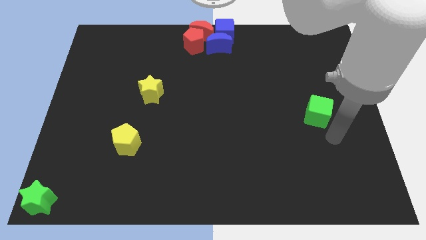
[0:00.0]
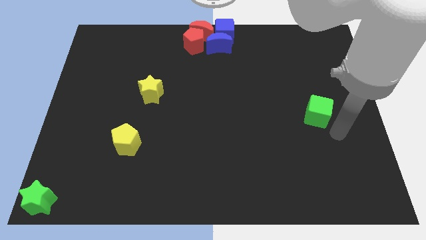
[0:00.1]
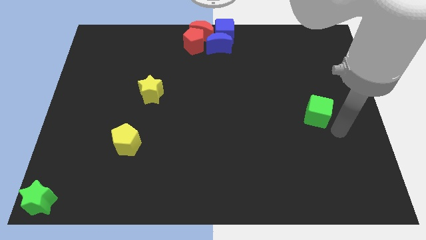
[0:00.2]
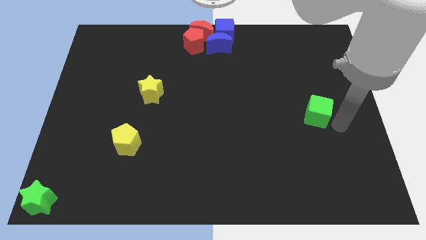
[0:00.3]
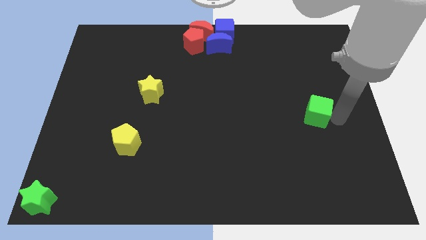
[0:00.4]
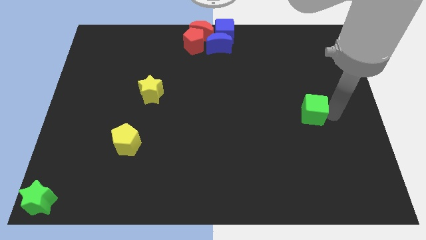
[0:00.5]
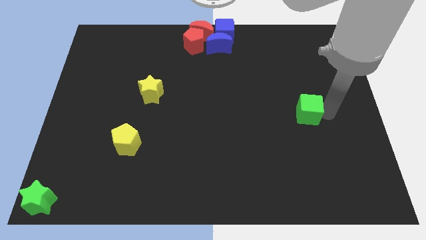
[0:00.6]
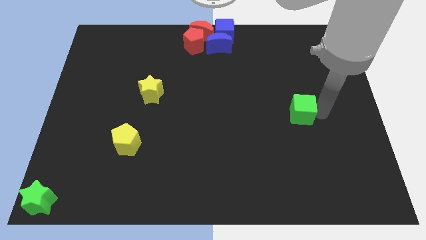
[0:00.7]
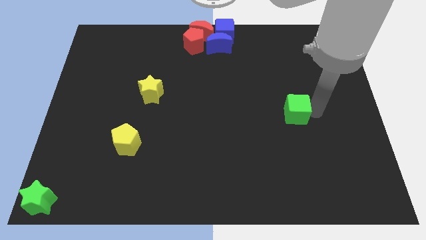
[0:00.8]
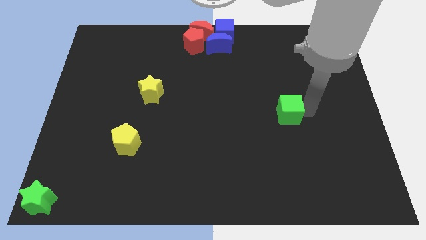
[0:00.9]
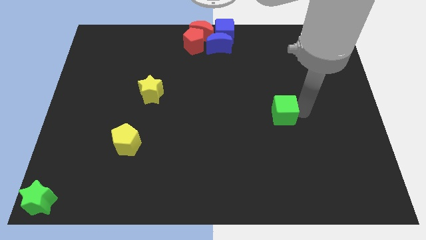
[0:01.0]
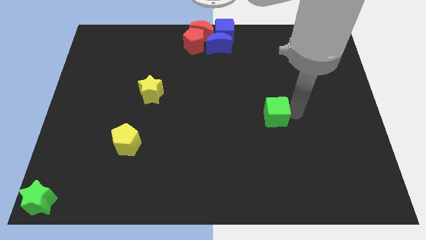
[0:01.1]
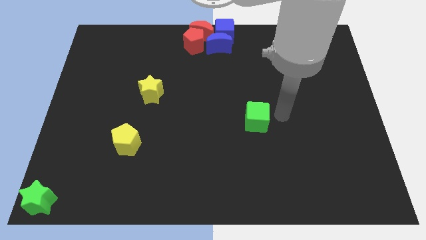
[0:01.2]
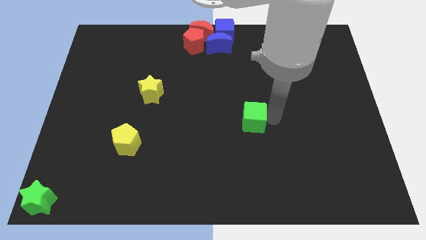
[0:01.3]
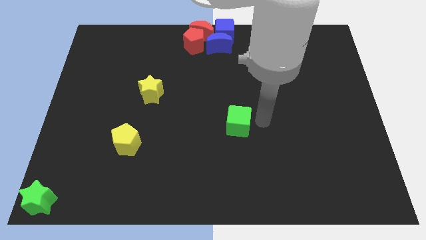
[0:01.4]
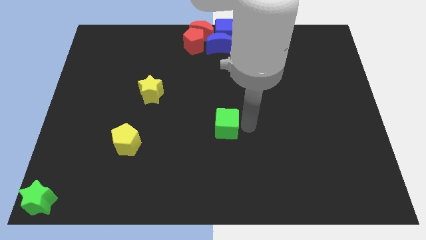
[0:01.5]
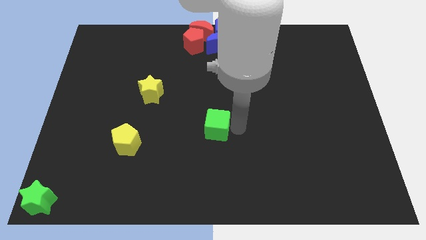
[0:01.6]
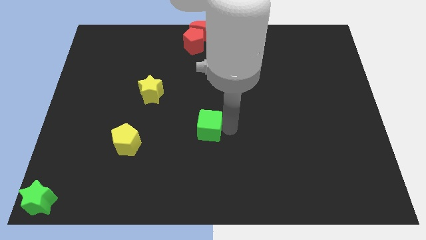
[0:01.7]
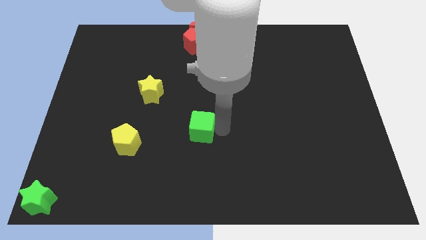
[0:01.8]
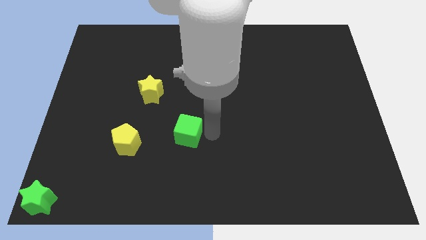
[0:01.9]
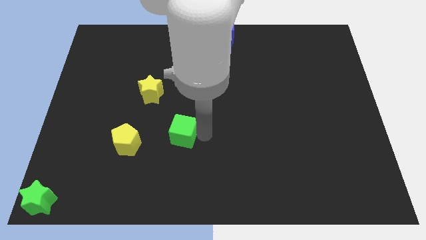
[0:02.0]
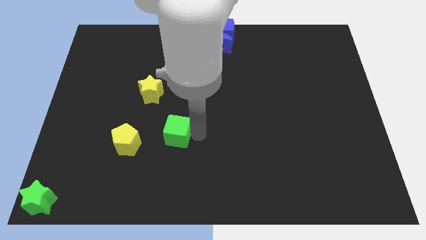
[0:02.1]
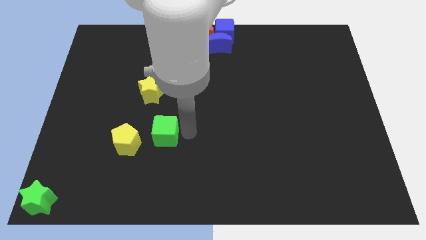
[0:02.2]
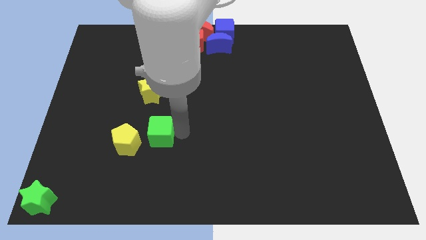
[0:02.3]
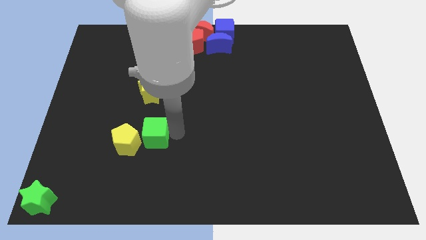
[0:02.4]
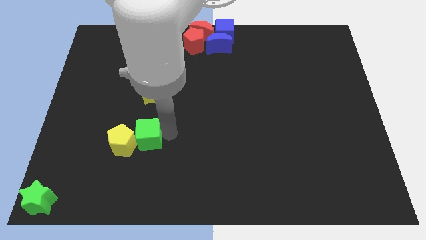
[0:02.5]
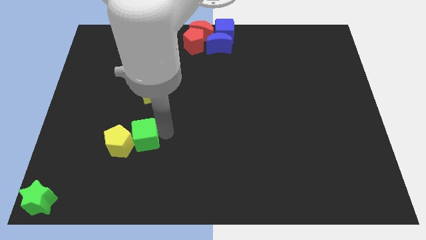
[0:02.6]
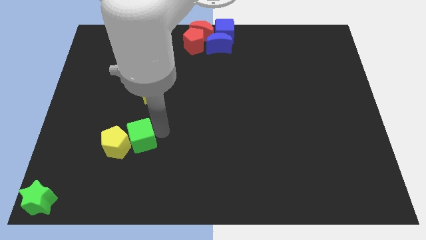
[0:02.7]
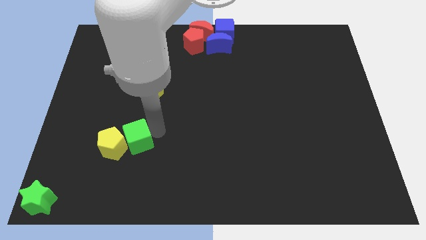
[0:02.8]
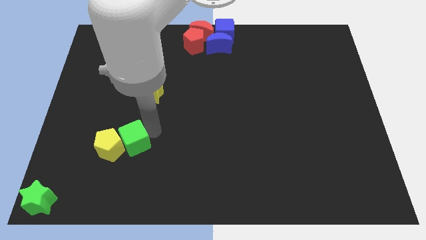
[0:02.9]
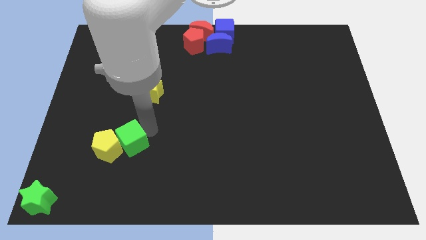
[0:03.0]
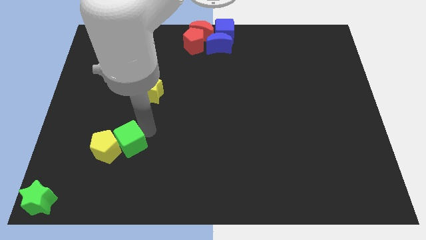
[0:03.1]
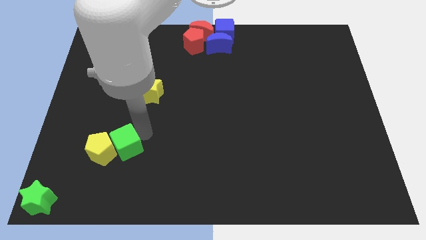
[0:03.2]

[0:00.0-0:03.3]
push the green cube into yellow pentagon

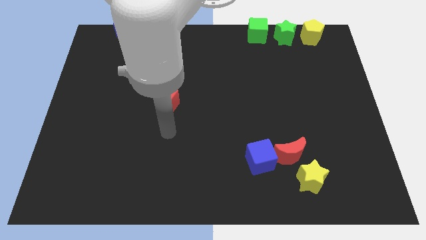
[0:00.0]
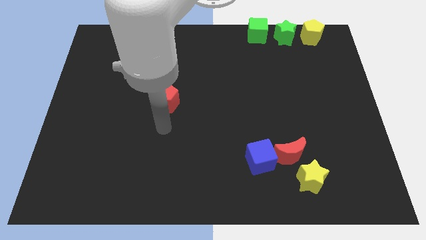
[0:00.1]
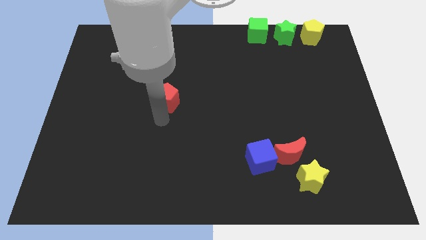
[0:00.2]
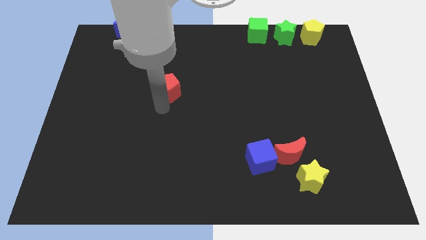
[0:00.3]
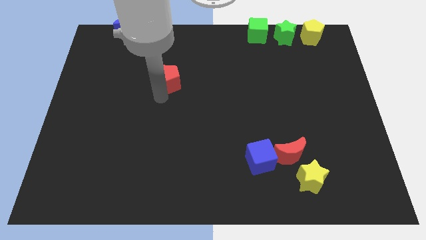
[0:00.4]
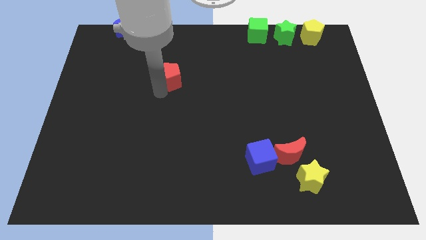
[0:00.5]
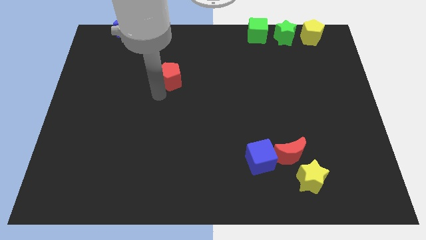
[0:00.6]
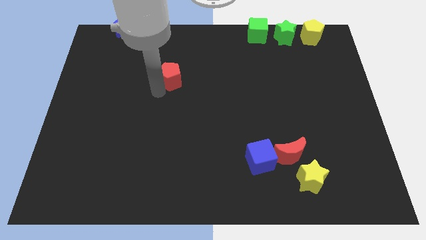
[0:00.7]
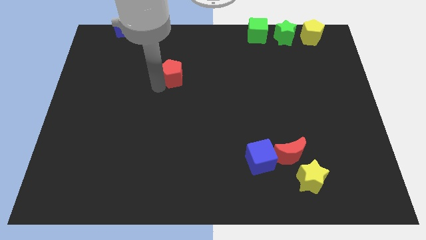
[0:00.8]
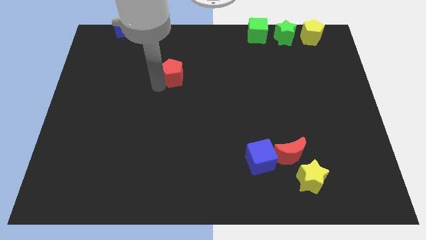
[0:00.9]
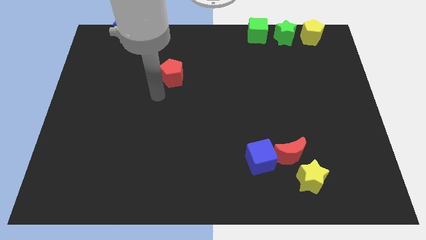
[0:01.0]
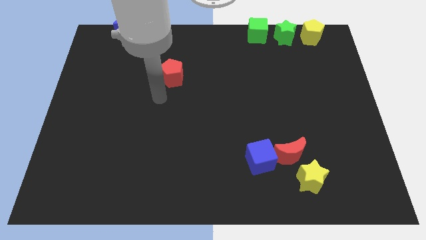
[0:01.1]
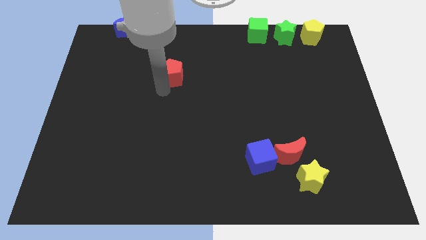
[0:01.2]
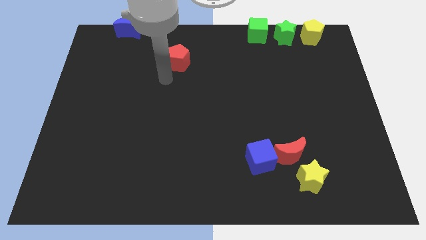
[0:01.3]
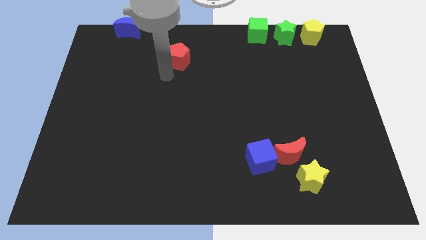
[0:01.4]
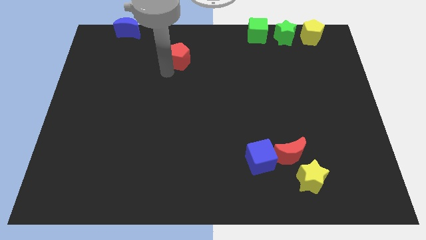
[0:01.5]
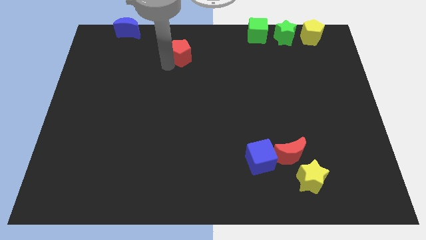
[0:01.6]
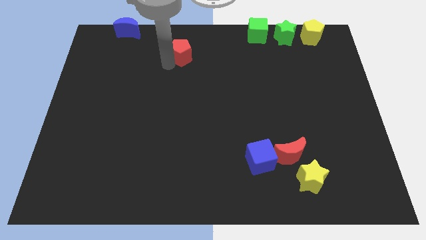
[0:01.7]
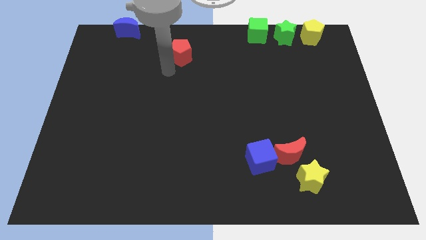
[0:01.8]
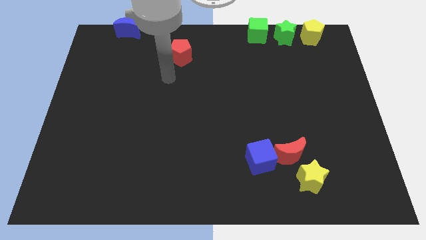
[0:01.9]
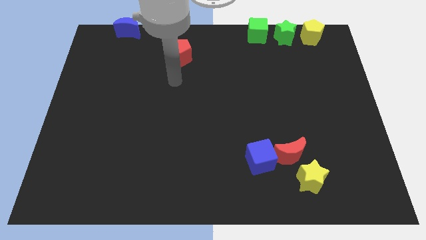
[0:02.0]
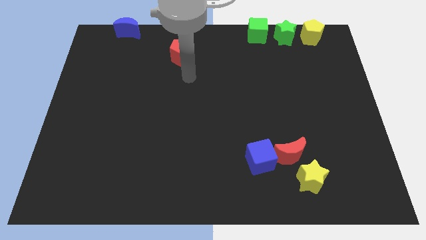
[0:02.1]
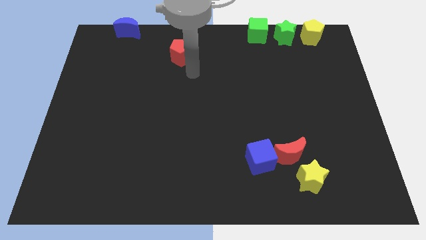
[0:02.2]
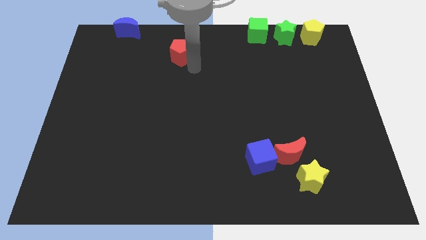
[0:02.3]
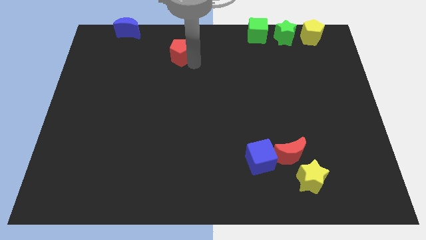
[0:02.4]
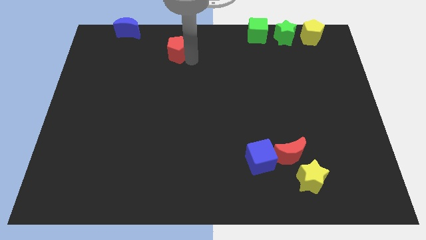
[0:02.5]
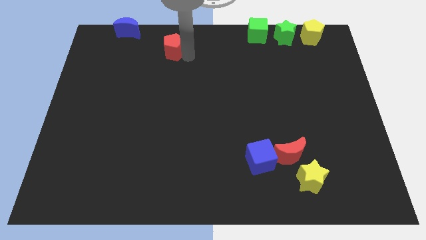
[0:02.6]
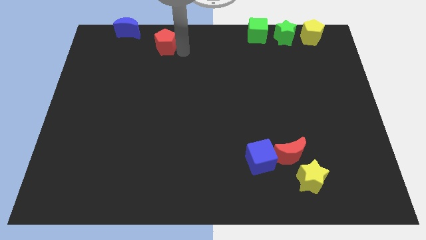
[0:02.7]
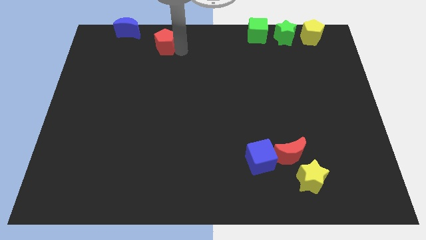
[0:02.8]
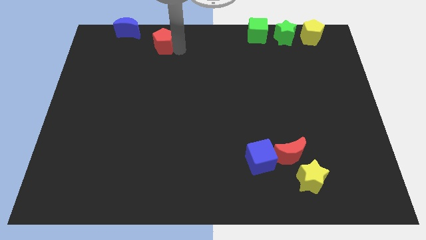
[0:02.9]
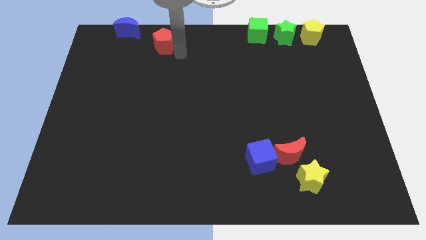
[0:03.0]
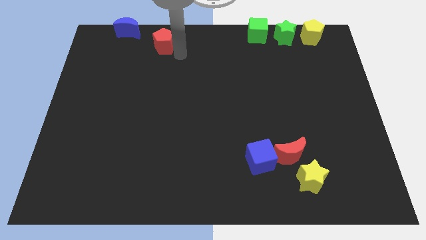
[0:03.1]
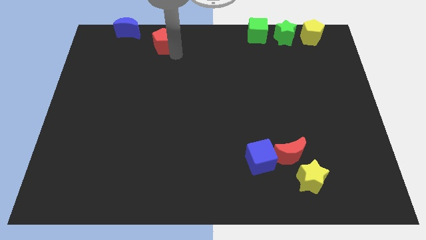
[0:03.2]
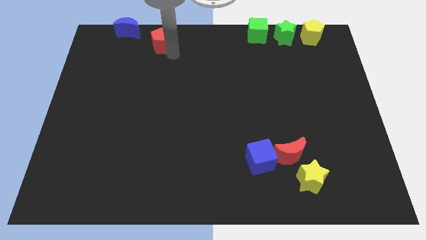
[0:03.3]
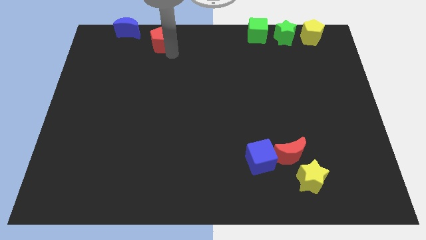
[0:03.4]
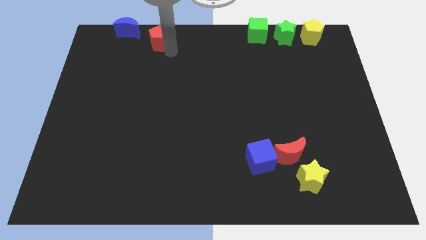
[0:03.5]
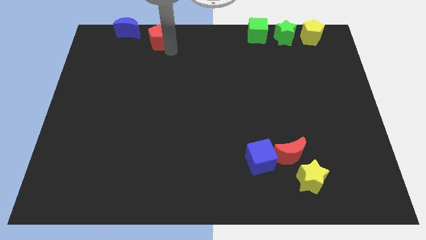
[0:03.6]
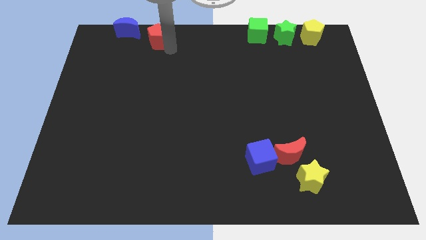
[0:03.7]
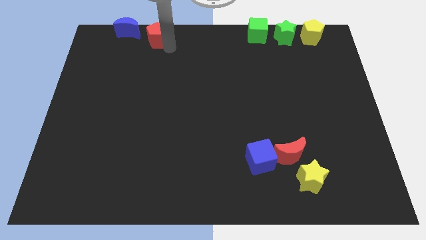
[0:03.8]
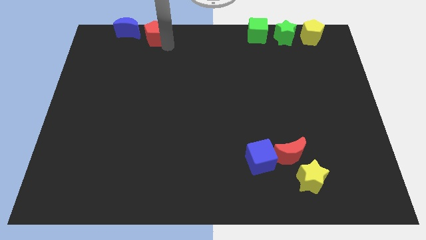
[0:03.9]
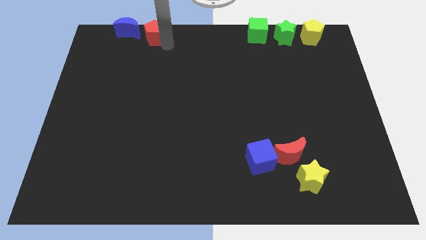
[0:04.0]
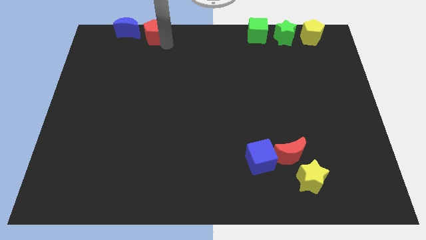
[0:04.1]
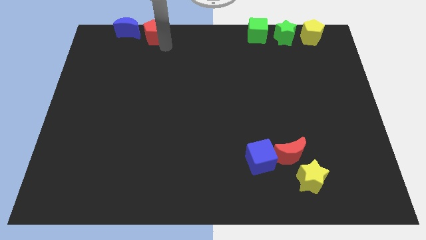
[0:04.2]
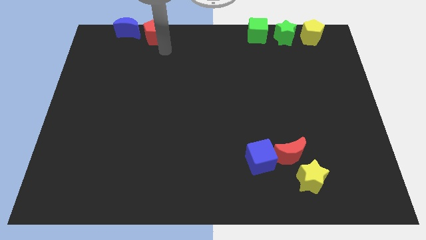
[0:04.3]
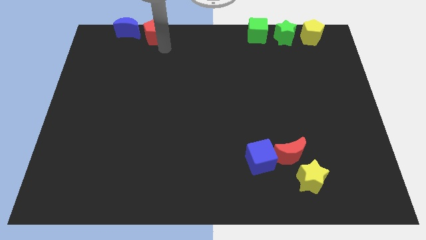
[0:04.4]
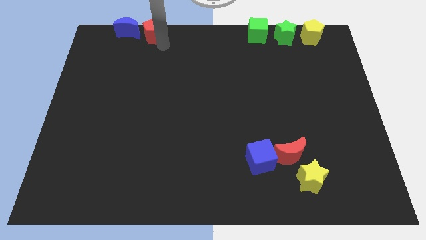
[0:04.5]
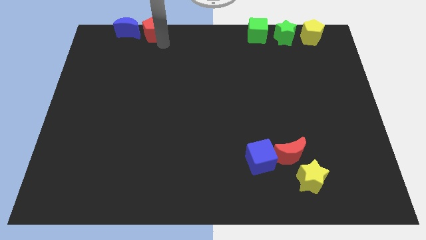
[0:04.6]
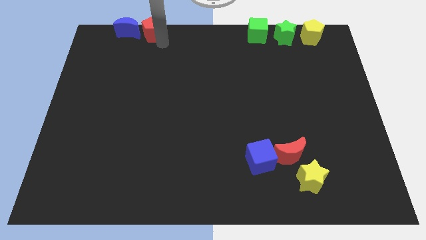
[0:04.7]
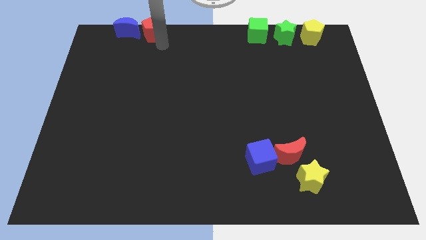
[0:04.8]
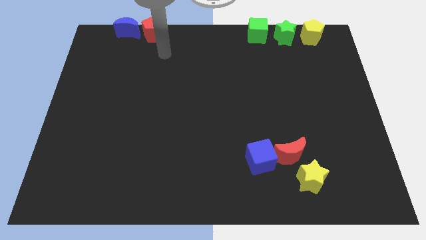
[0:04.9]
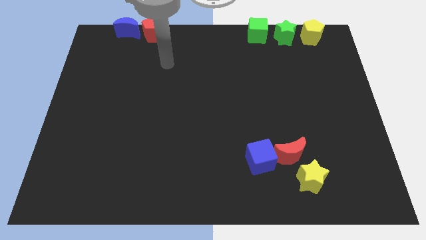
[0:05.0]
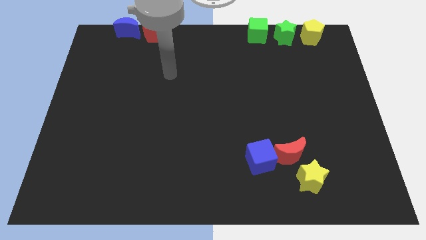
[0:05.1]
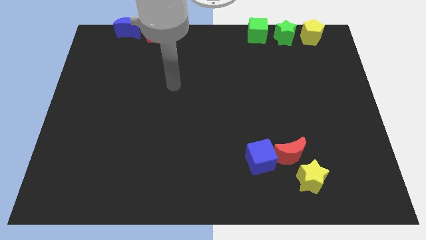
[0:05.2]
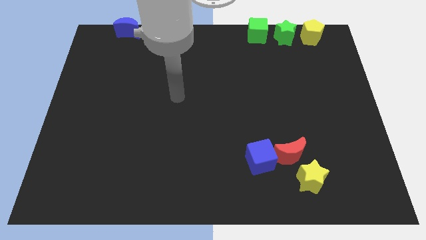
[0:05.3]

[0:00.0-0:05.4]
push the red pentagon to the right side of the blue moon

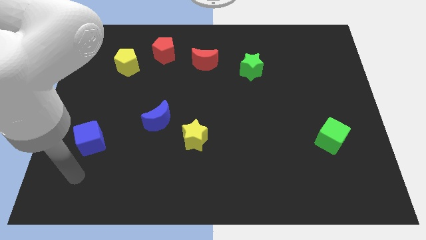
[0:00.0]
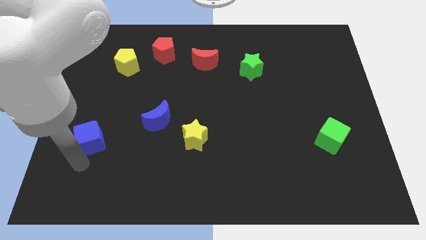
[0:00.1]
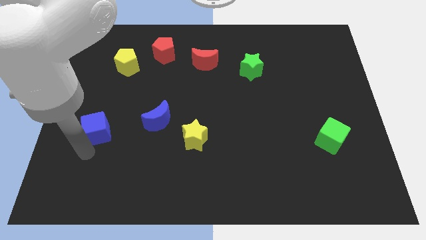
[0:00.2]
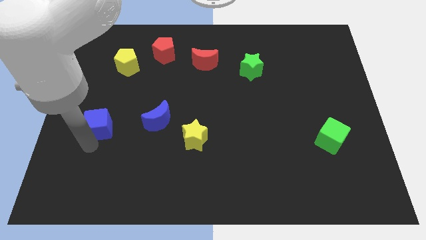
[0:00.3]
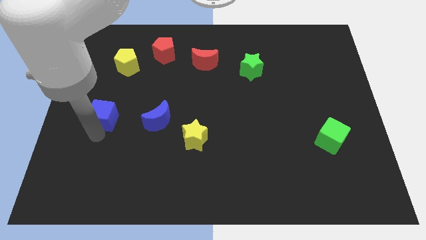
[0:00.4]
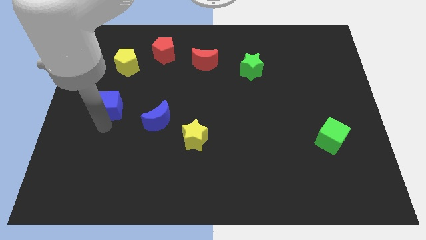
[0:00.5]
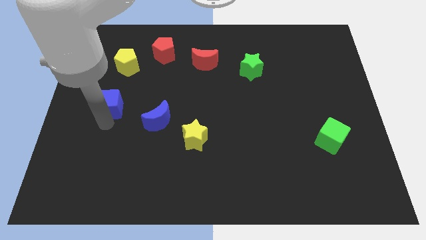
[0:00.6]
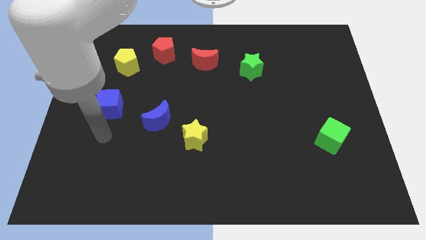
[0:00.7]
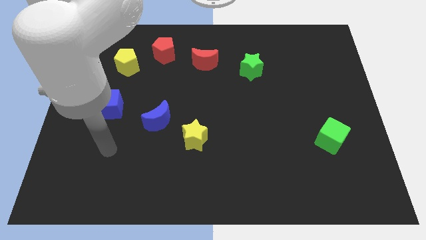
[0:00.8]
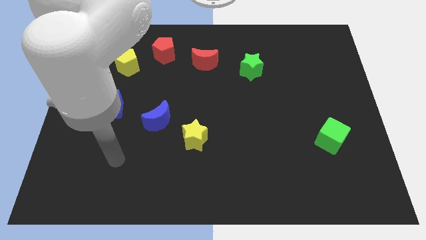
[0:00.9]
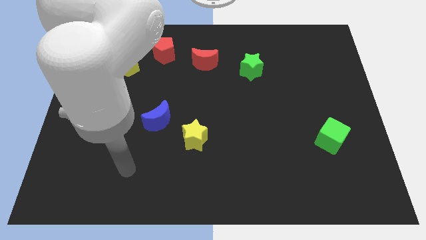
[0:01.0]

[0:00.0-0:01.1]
push the blue cube upwards
